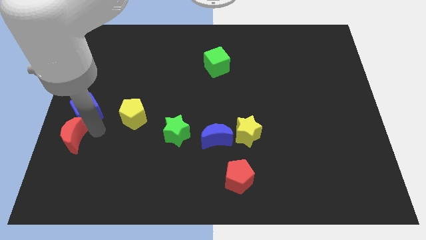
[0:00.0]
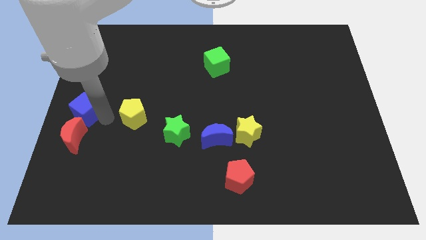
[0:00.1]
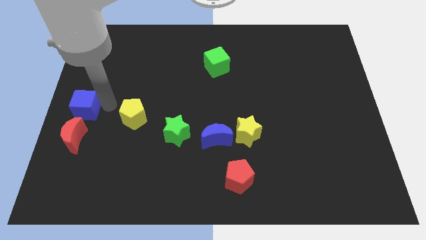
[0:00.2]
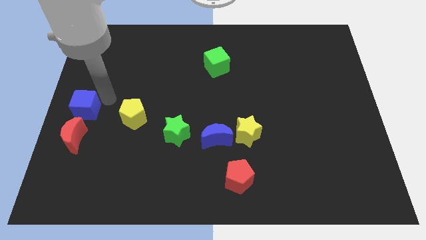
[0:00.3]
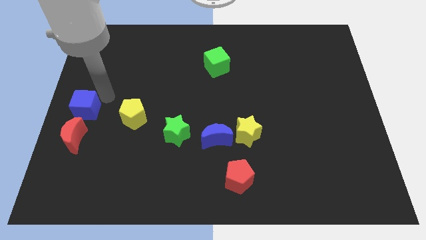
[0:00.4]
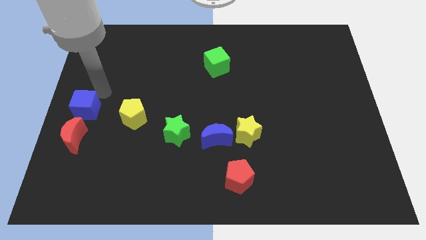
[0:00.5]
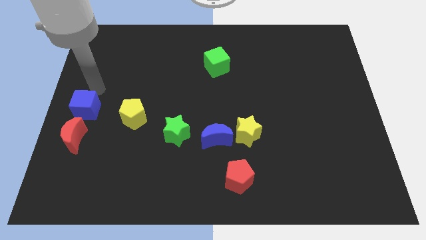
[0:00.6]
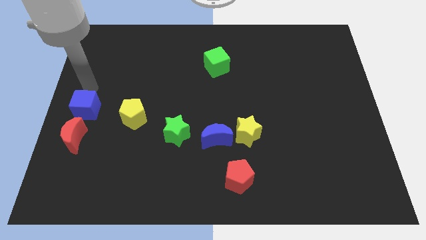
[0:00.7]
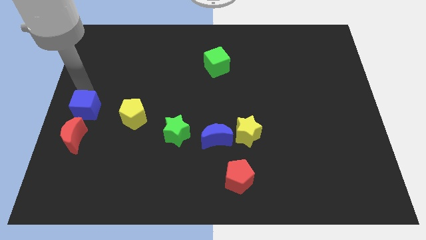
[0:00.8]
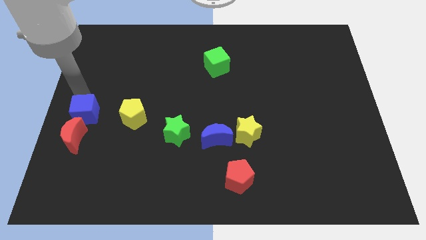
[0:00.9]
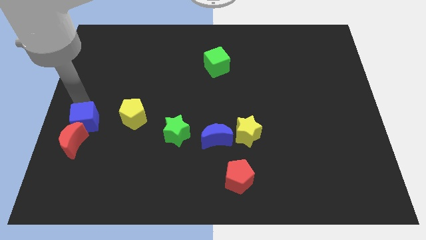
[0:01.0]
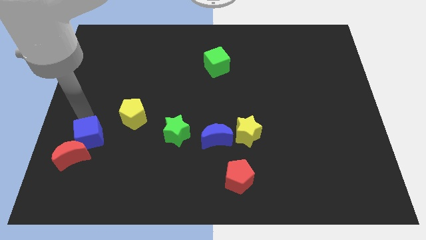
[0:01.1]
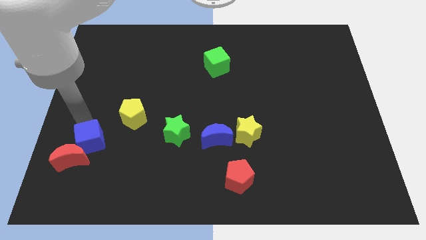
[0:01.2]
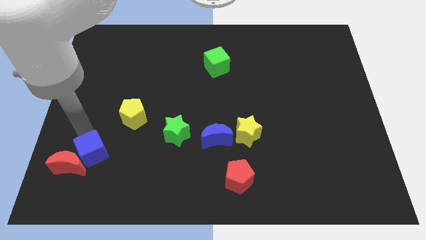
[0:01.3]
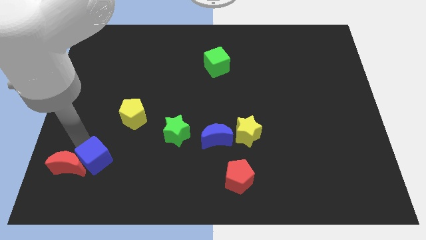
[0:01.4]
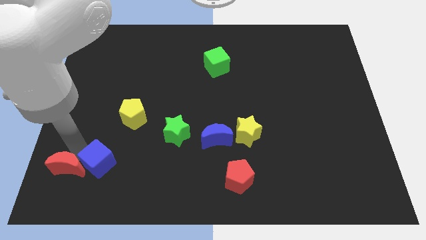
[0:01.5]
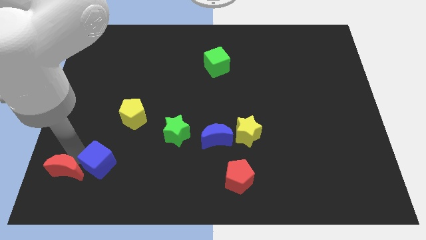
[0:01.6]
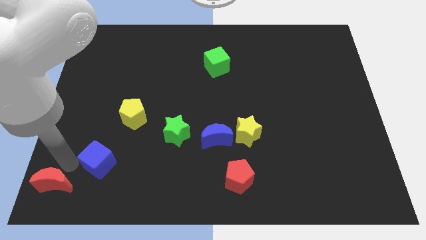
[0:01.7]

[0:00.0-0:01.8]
push the blue cube to the right side of the red moon

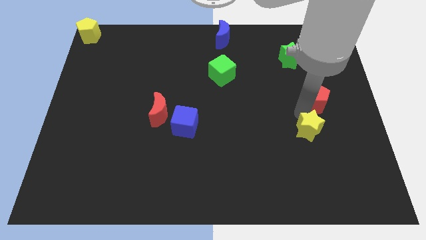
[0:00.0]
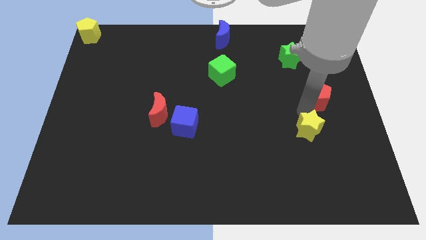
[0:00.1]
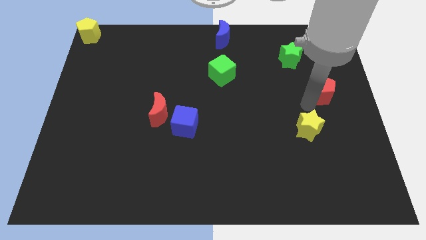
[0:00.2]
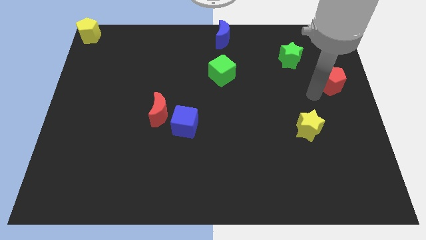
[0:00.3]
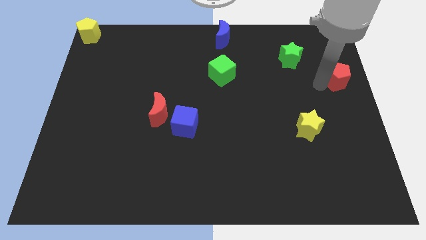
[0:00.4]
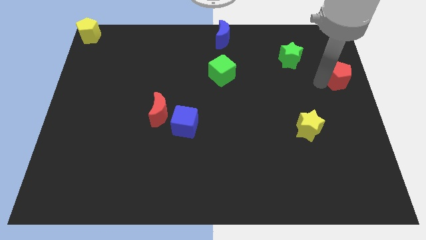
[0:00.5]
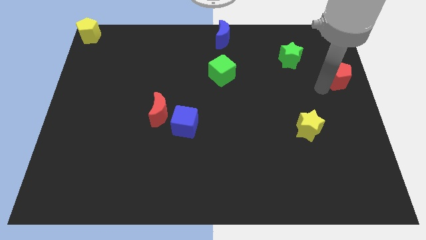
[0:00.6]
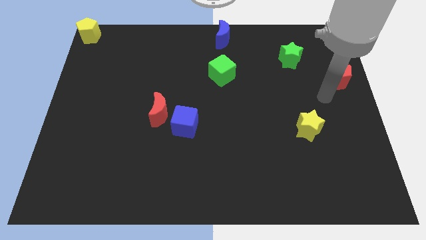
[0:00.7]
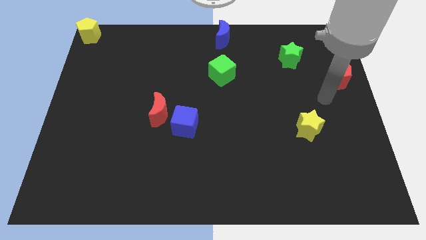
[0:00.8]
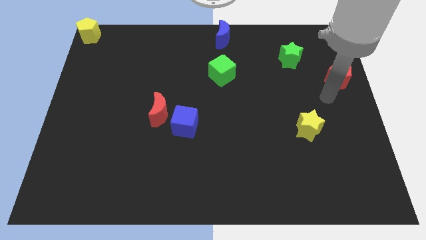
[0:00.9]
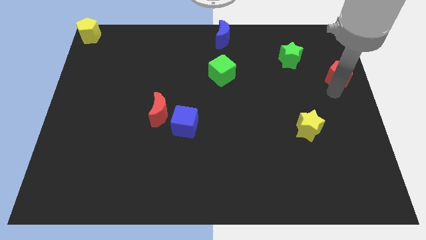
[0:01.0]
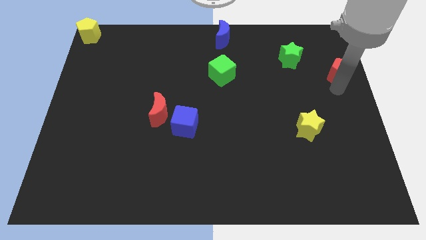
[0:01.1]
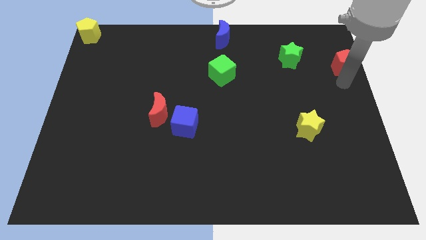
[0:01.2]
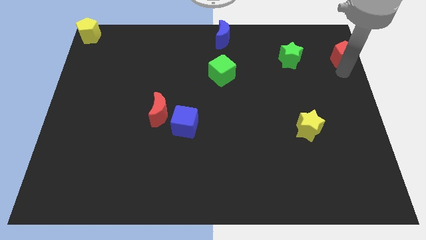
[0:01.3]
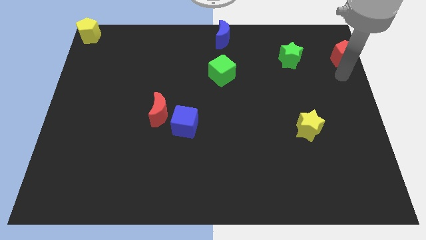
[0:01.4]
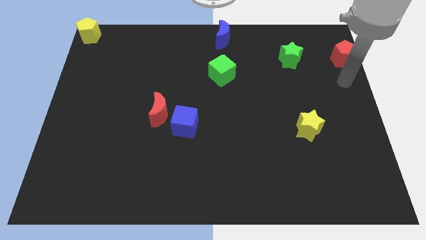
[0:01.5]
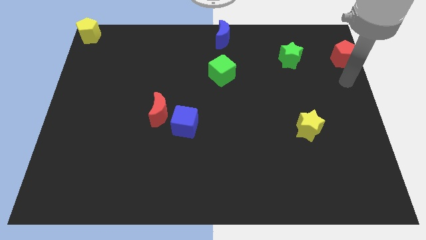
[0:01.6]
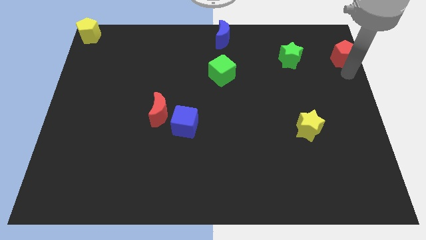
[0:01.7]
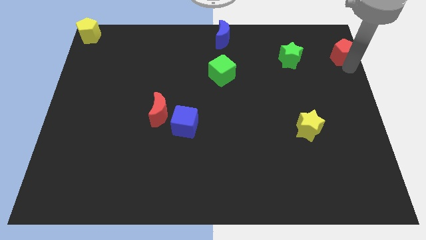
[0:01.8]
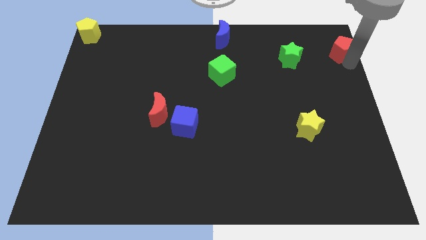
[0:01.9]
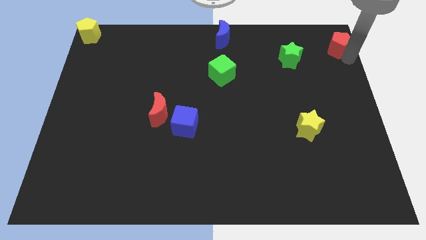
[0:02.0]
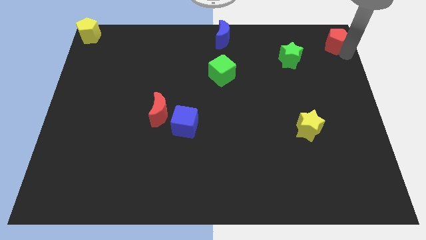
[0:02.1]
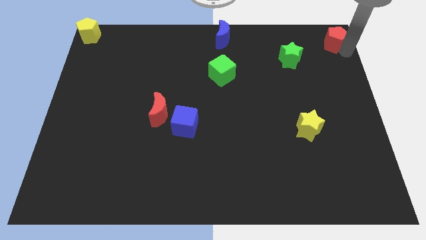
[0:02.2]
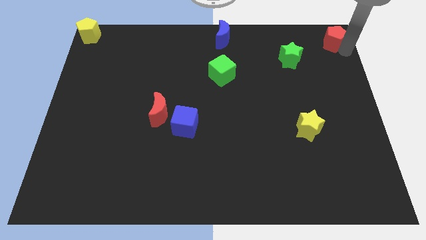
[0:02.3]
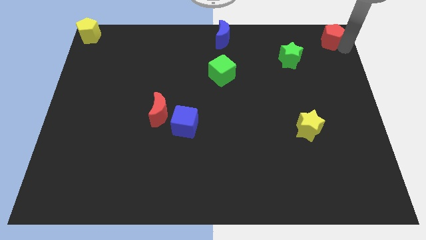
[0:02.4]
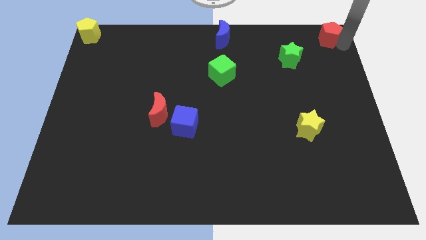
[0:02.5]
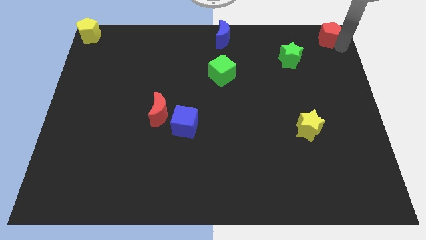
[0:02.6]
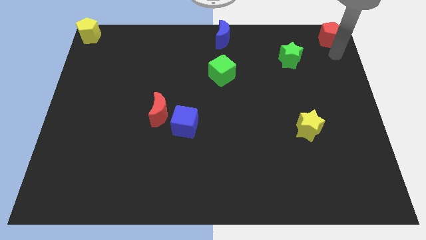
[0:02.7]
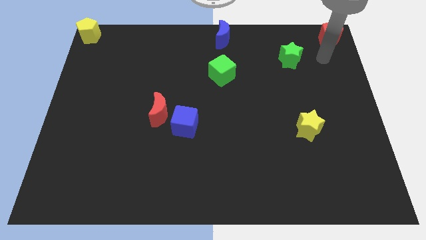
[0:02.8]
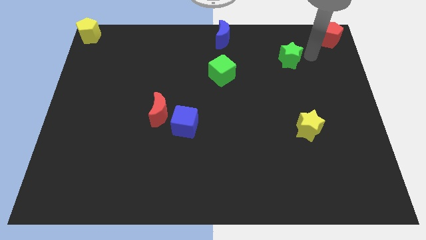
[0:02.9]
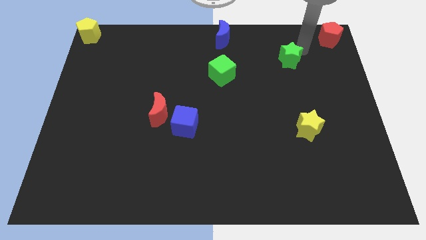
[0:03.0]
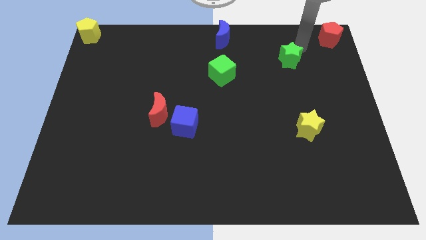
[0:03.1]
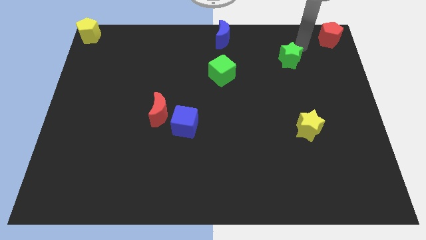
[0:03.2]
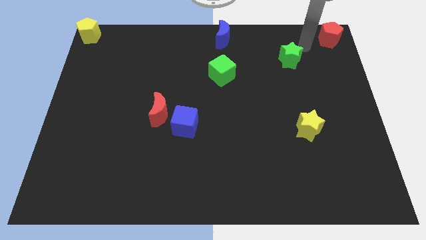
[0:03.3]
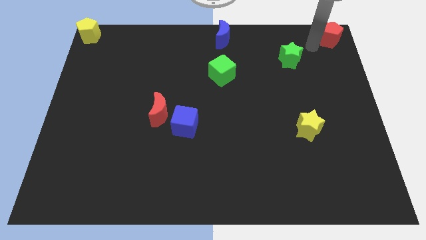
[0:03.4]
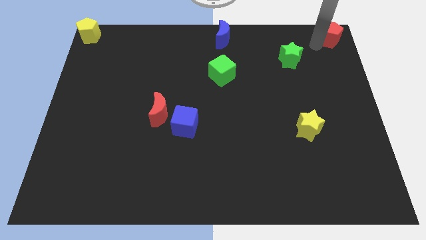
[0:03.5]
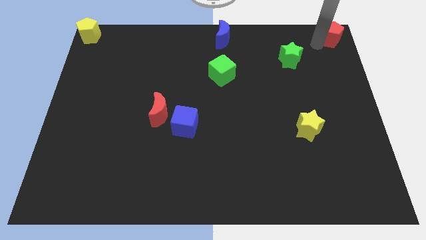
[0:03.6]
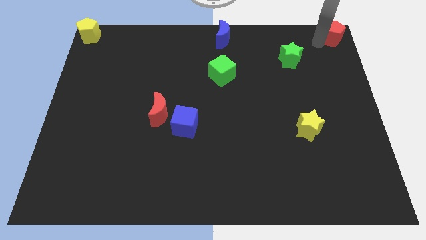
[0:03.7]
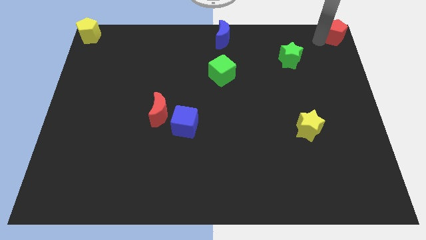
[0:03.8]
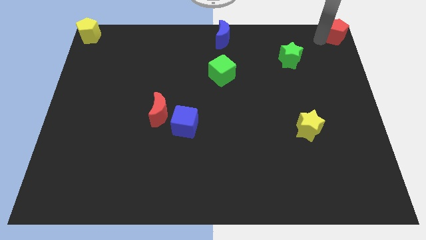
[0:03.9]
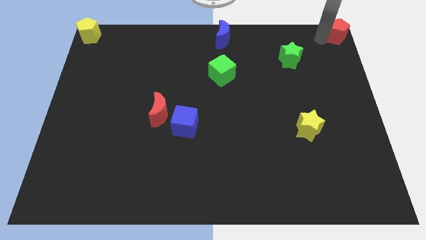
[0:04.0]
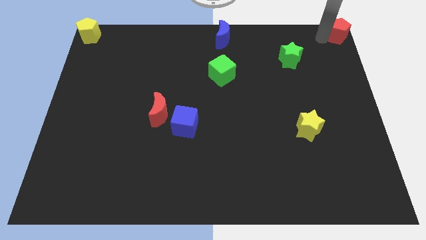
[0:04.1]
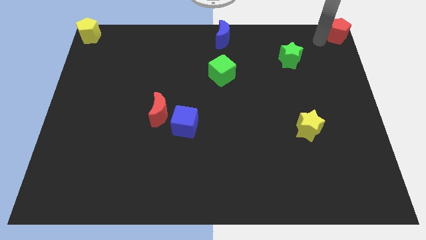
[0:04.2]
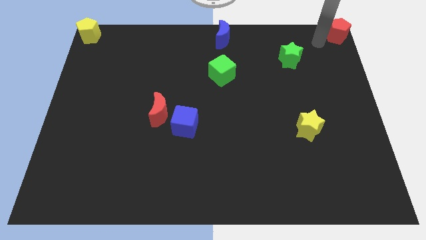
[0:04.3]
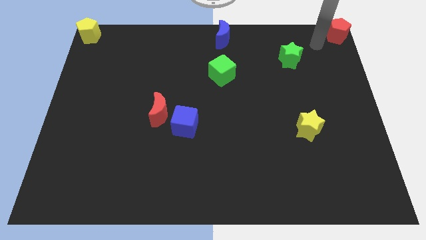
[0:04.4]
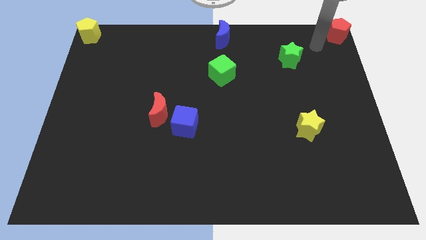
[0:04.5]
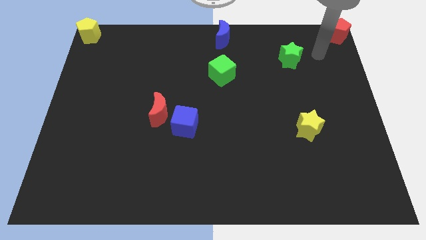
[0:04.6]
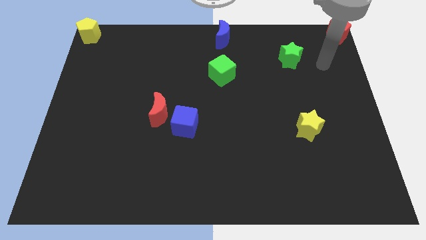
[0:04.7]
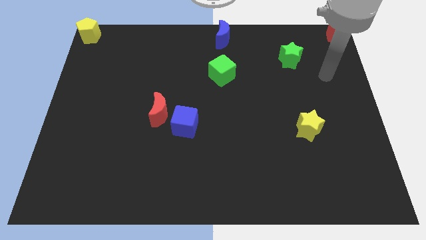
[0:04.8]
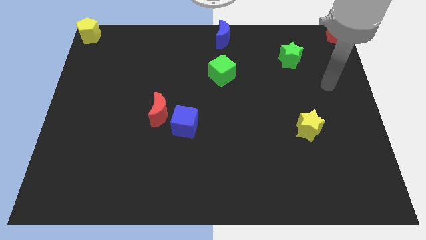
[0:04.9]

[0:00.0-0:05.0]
push the red pentagon to the top right of the board

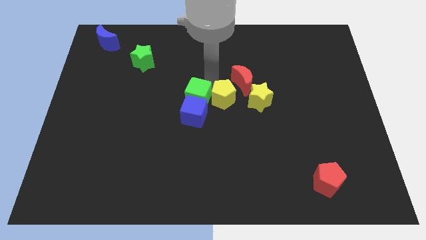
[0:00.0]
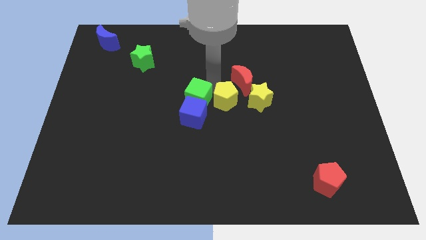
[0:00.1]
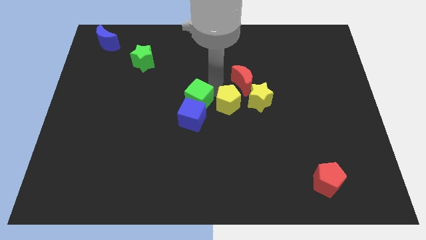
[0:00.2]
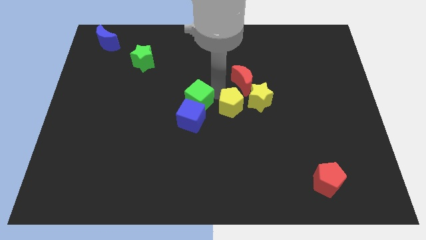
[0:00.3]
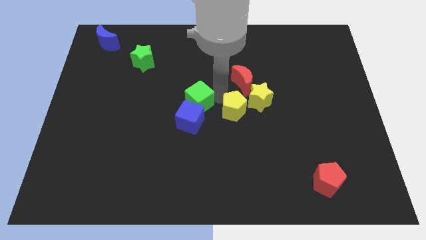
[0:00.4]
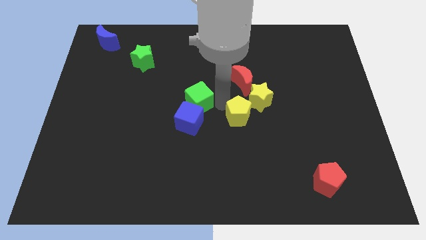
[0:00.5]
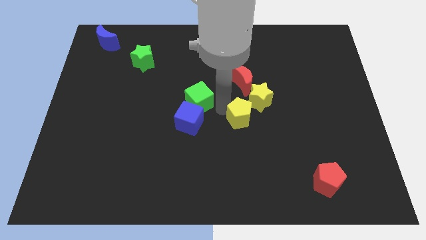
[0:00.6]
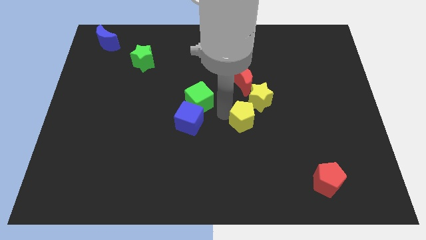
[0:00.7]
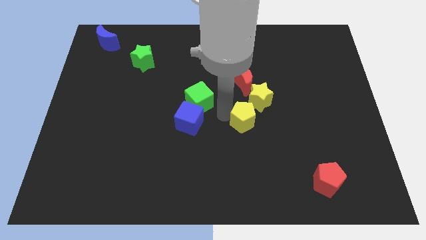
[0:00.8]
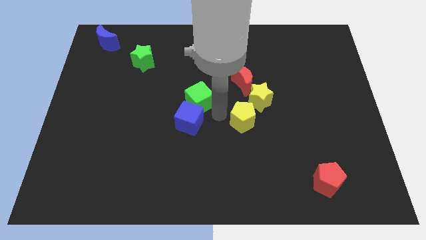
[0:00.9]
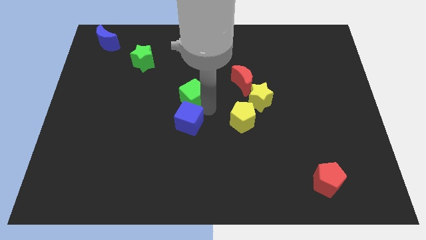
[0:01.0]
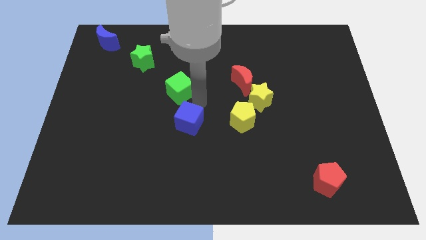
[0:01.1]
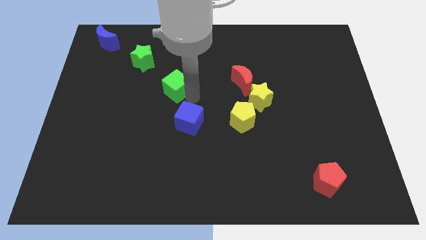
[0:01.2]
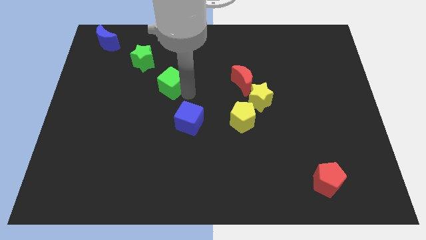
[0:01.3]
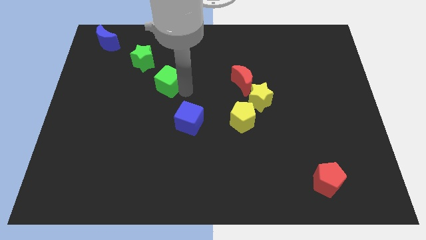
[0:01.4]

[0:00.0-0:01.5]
separate the yellow pentagon and green cube from each other

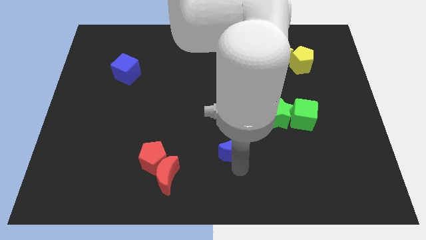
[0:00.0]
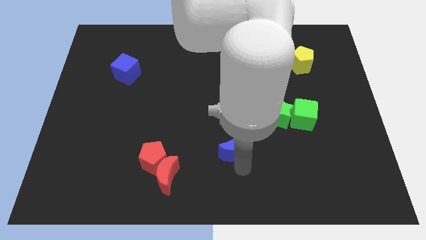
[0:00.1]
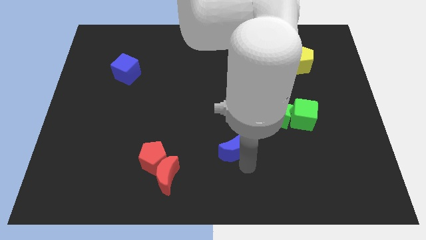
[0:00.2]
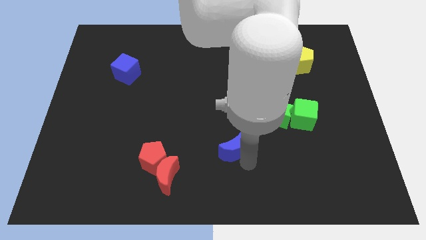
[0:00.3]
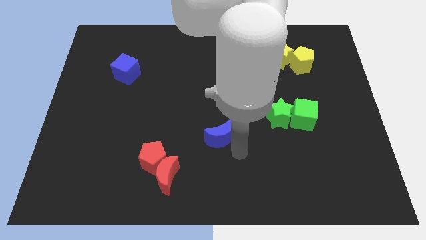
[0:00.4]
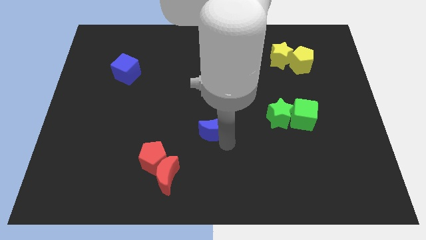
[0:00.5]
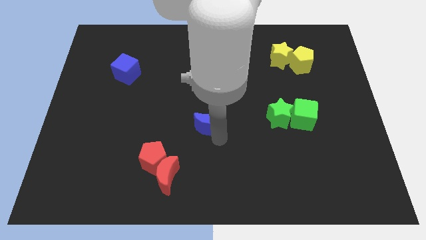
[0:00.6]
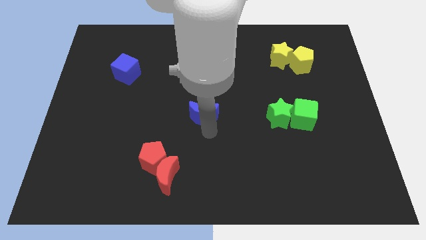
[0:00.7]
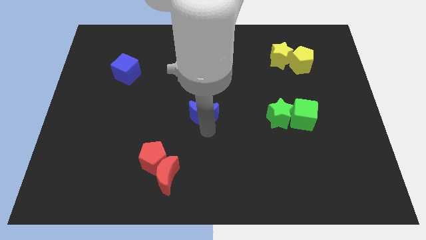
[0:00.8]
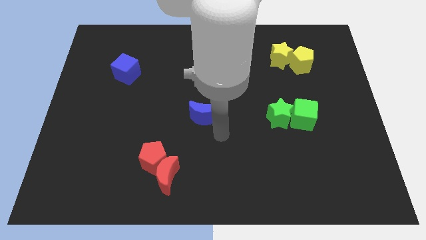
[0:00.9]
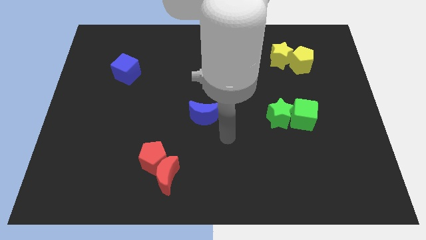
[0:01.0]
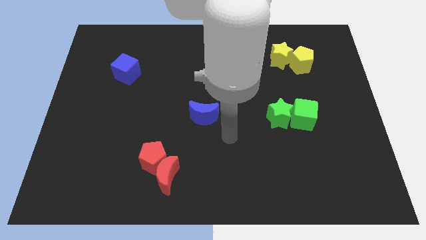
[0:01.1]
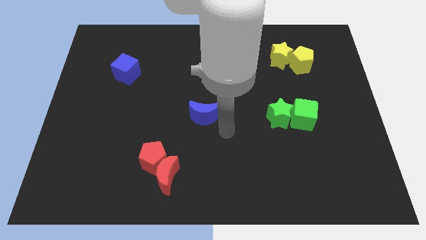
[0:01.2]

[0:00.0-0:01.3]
push blue moon diagonally upwards
